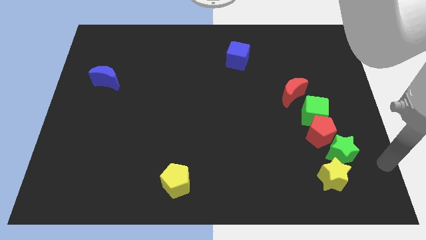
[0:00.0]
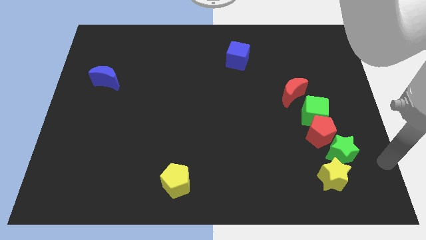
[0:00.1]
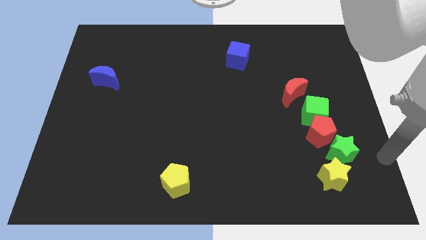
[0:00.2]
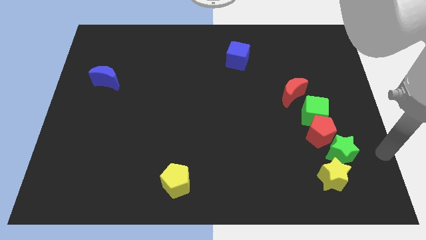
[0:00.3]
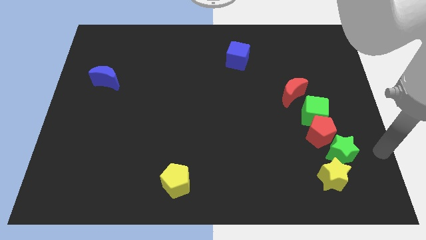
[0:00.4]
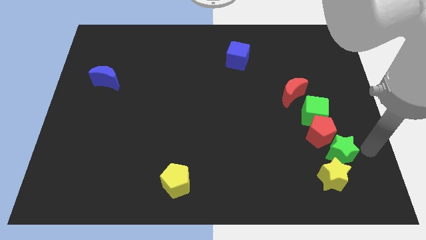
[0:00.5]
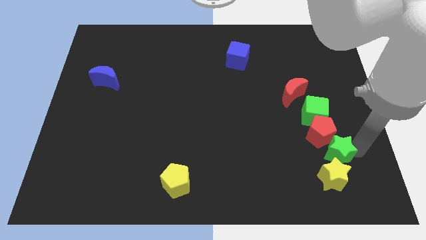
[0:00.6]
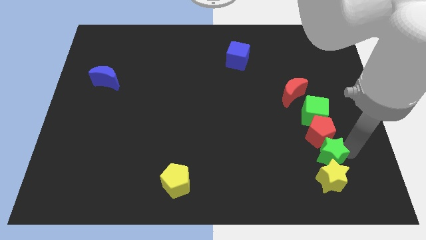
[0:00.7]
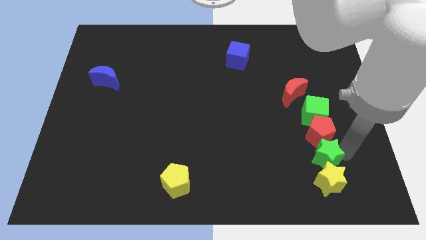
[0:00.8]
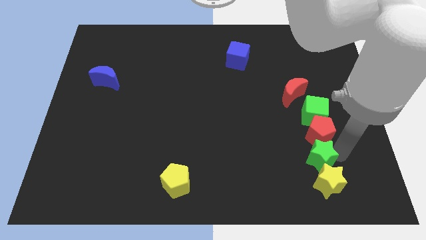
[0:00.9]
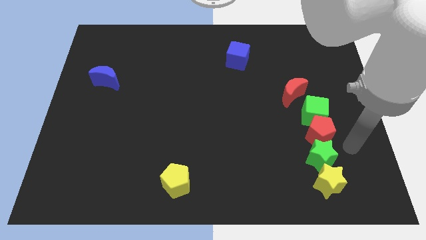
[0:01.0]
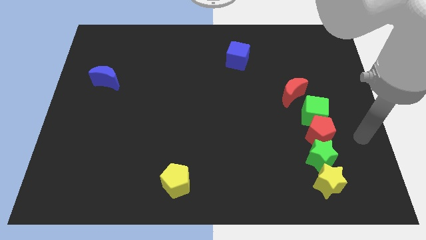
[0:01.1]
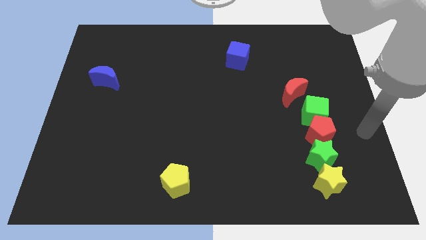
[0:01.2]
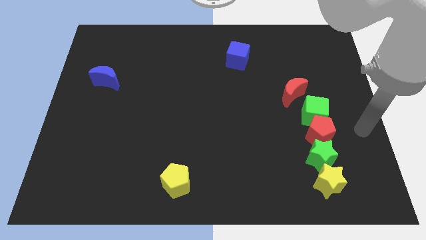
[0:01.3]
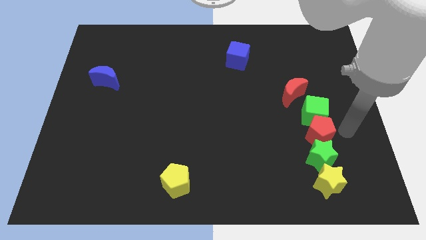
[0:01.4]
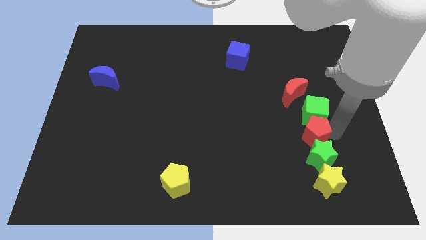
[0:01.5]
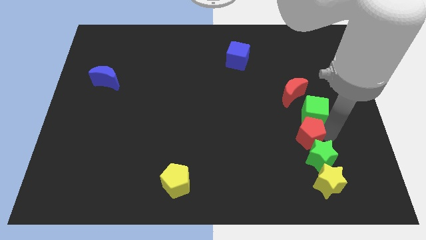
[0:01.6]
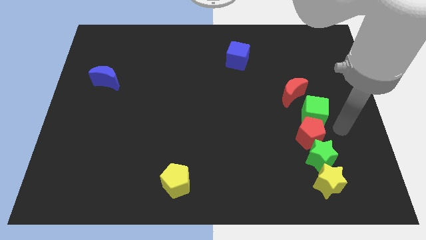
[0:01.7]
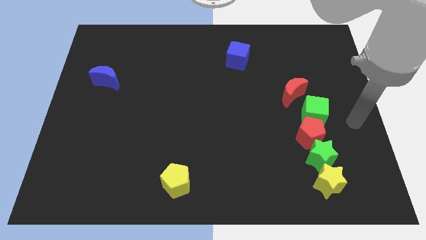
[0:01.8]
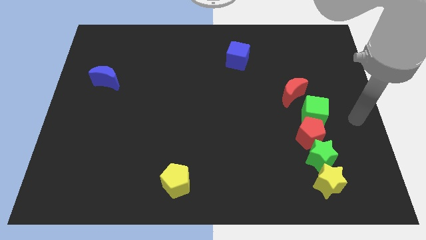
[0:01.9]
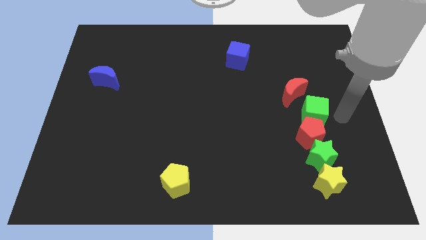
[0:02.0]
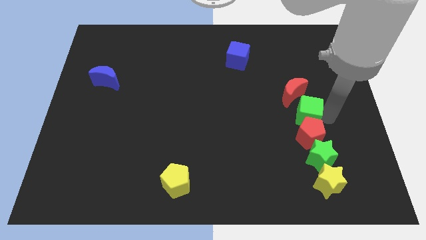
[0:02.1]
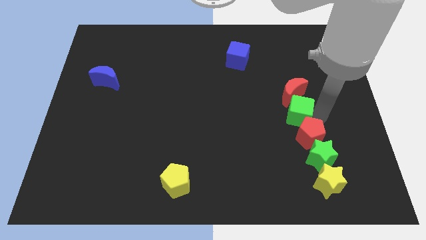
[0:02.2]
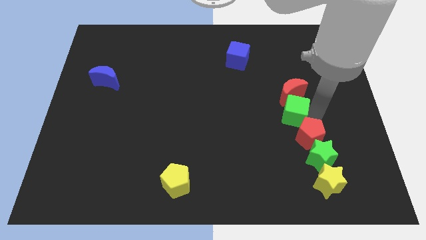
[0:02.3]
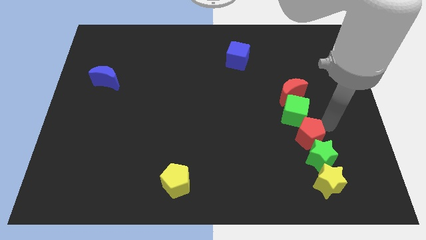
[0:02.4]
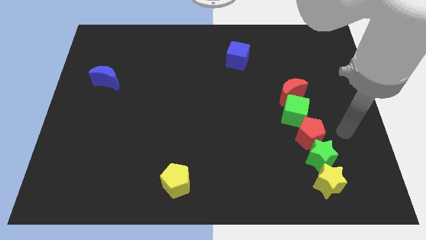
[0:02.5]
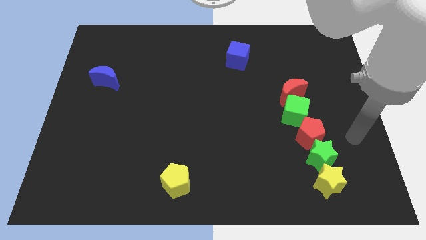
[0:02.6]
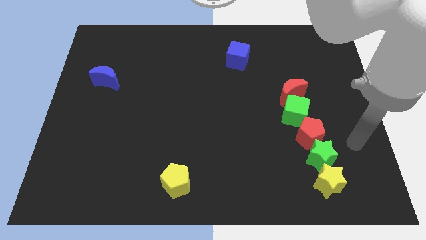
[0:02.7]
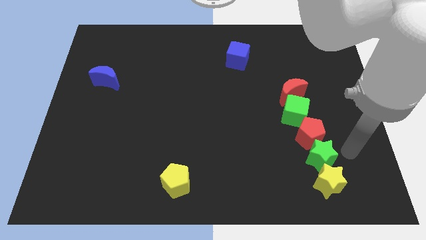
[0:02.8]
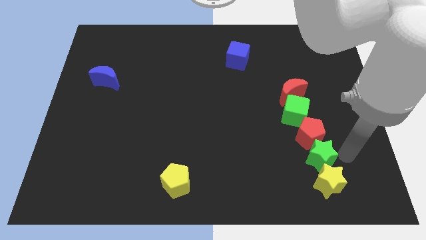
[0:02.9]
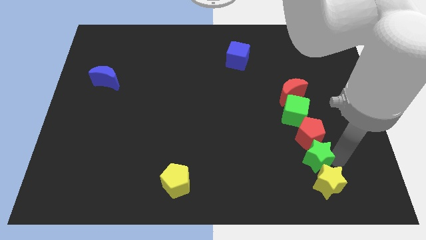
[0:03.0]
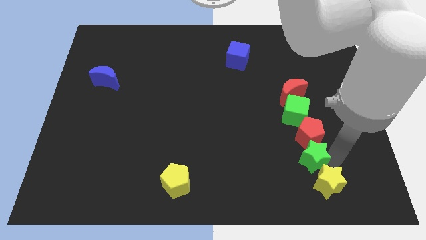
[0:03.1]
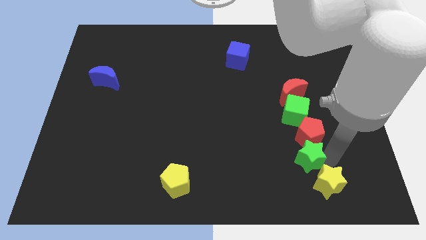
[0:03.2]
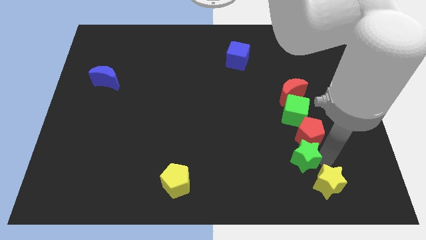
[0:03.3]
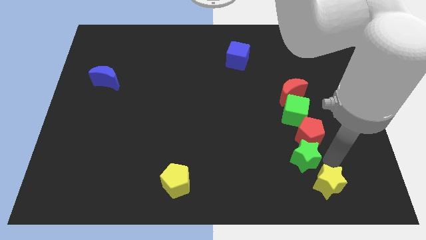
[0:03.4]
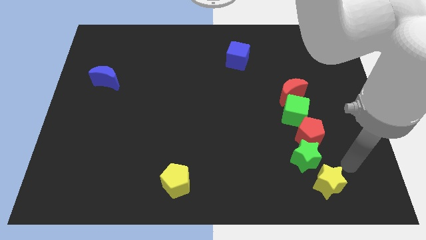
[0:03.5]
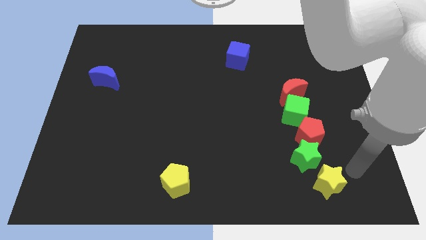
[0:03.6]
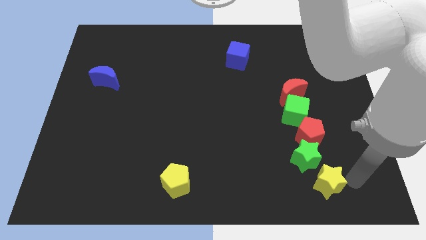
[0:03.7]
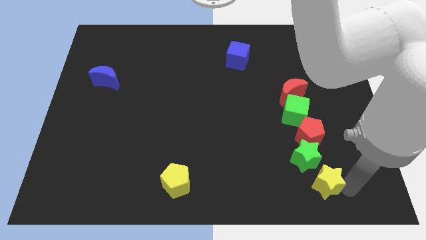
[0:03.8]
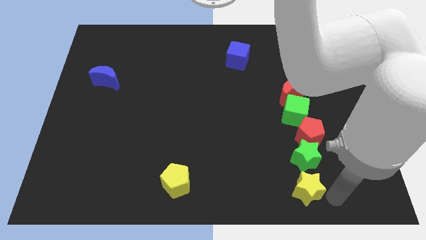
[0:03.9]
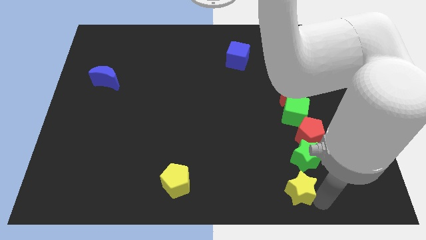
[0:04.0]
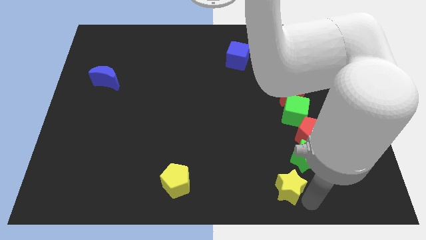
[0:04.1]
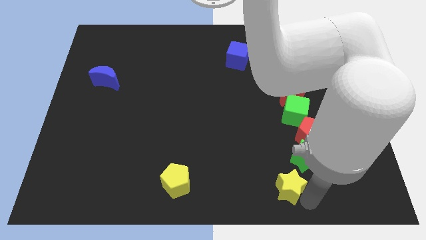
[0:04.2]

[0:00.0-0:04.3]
push blocks towards left

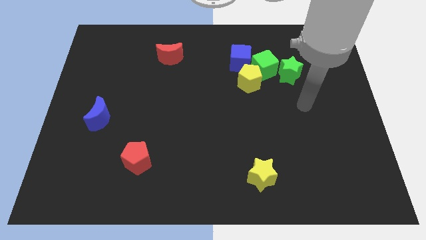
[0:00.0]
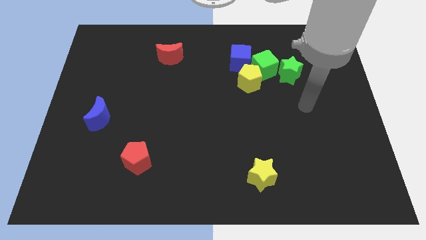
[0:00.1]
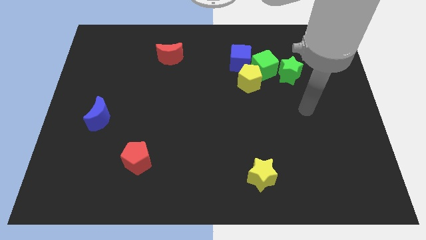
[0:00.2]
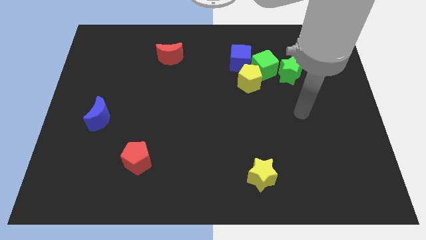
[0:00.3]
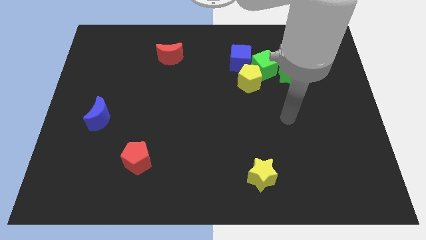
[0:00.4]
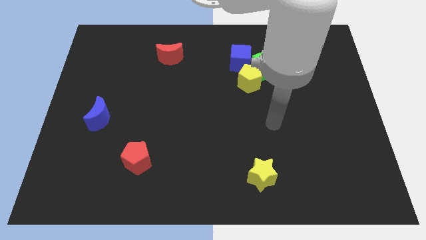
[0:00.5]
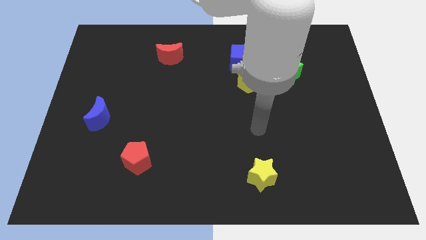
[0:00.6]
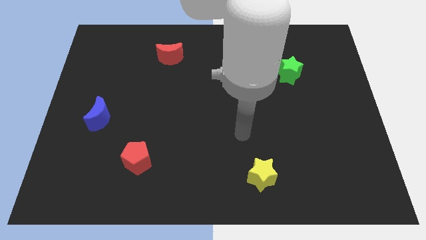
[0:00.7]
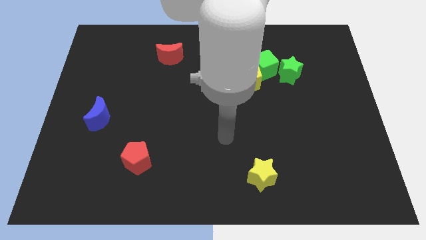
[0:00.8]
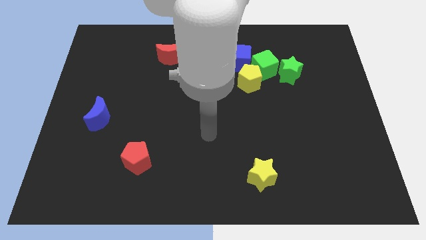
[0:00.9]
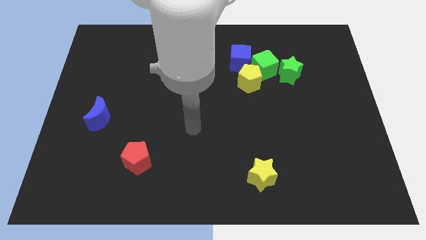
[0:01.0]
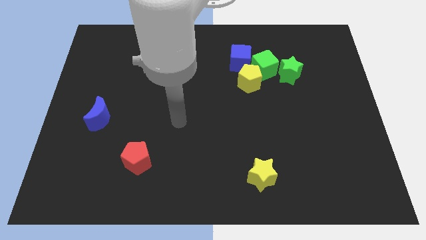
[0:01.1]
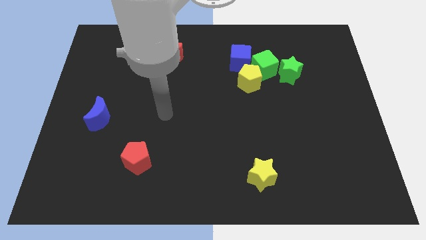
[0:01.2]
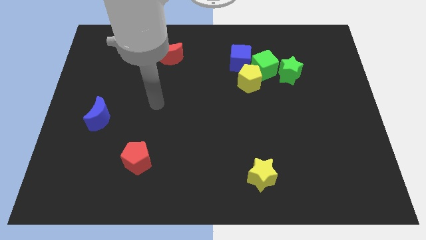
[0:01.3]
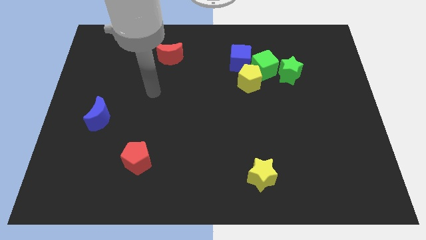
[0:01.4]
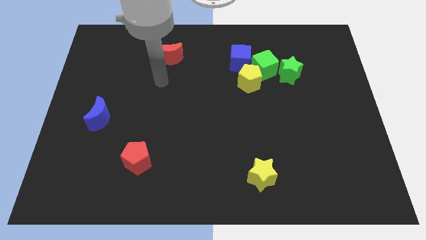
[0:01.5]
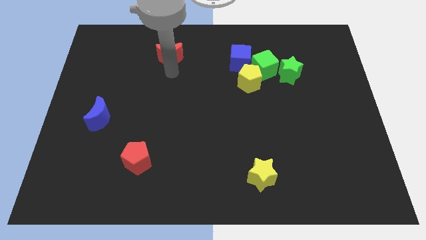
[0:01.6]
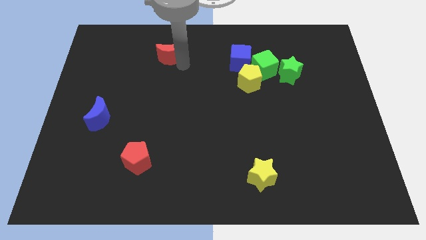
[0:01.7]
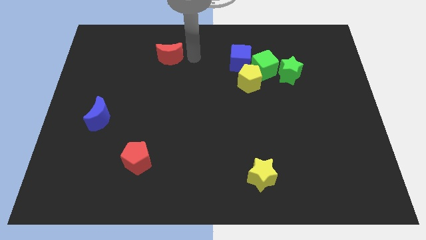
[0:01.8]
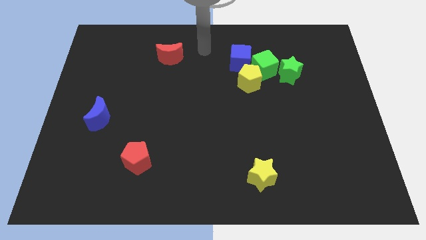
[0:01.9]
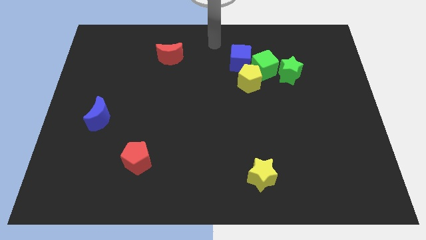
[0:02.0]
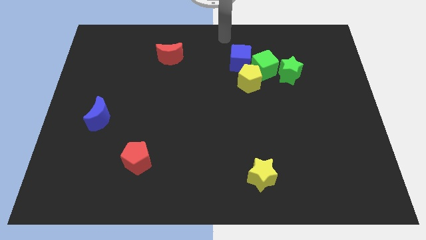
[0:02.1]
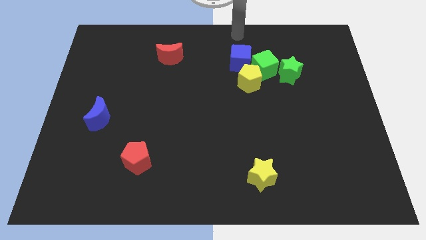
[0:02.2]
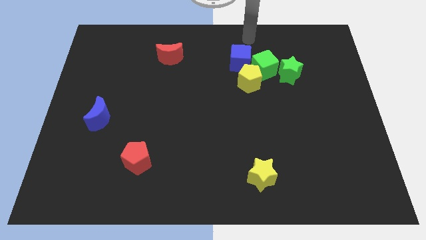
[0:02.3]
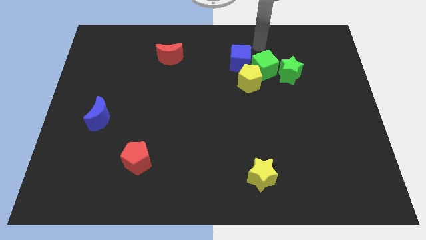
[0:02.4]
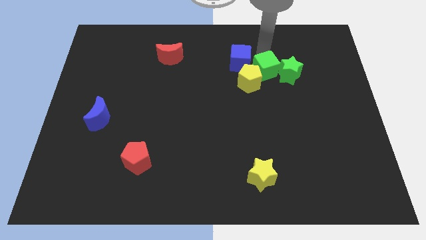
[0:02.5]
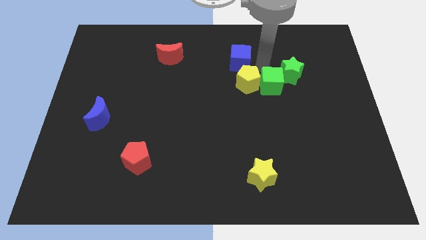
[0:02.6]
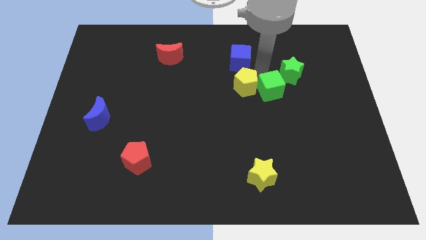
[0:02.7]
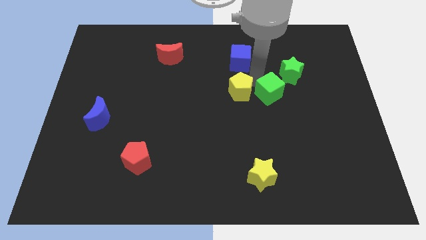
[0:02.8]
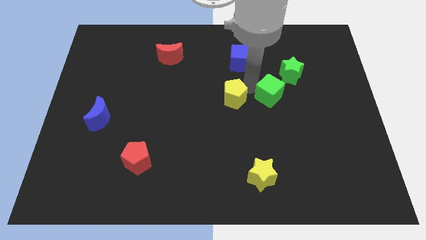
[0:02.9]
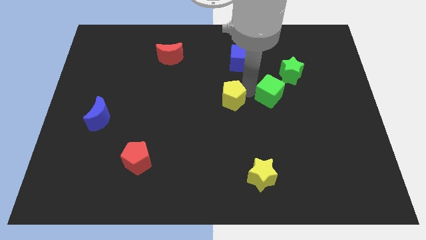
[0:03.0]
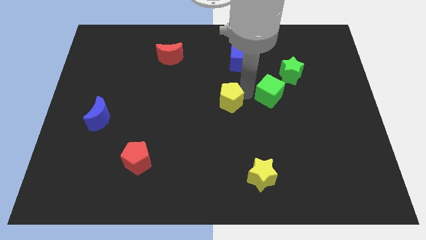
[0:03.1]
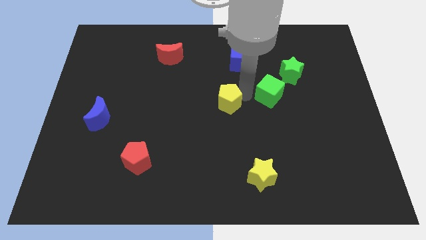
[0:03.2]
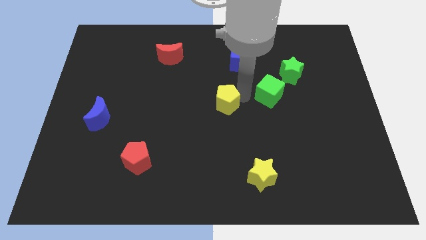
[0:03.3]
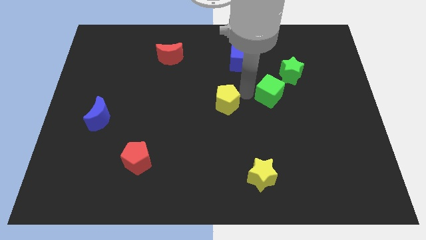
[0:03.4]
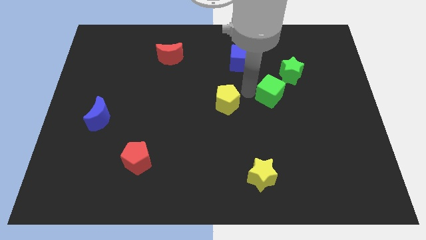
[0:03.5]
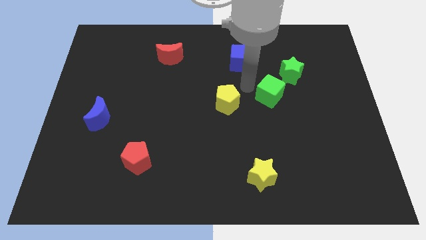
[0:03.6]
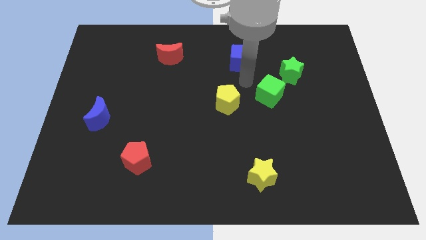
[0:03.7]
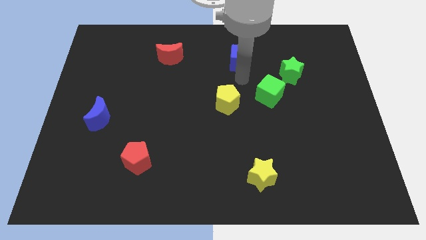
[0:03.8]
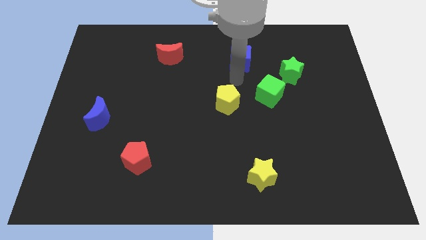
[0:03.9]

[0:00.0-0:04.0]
separate yellow pentagon and green cube

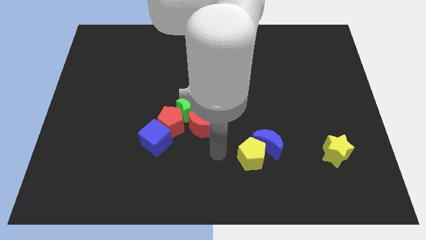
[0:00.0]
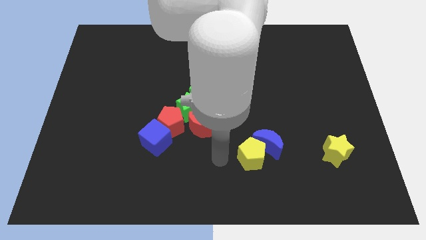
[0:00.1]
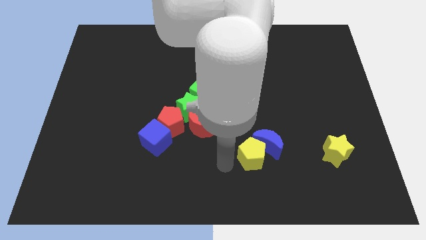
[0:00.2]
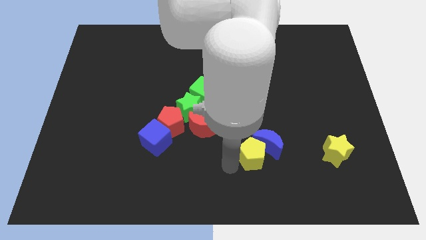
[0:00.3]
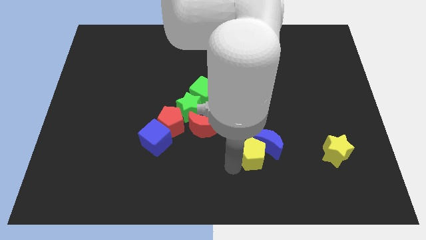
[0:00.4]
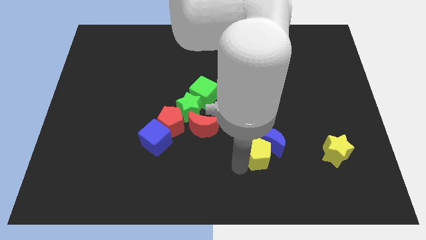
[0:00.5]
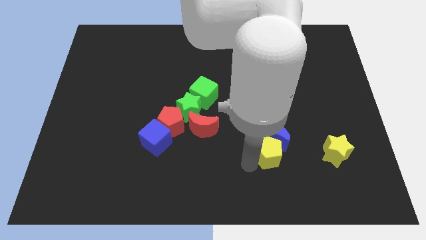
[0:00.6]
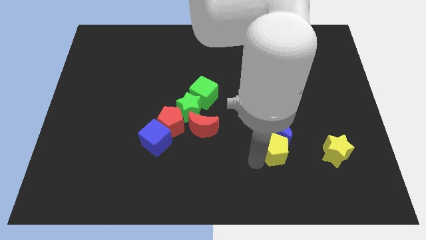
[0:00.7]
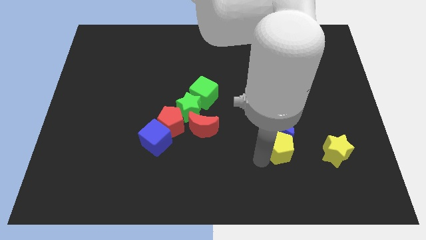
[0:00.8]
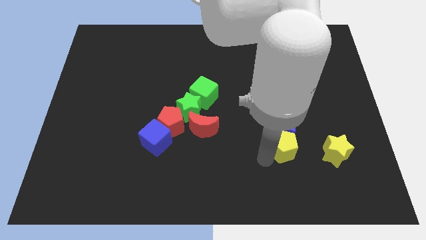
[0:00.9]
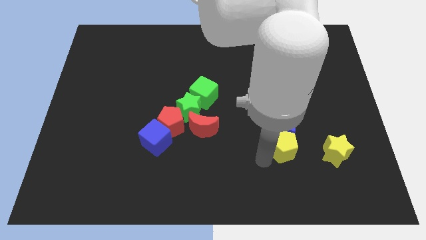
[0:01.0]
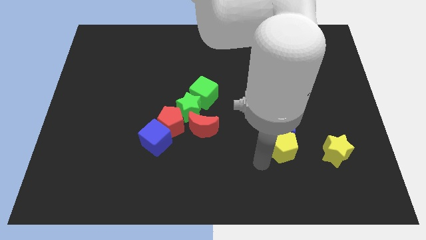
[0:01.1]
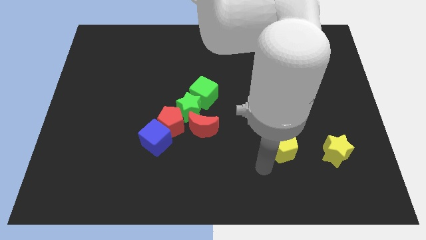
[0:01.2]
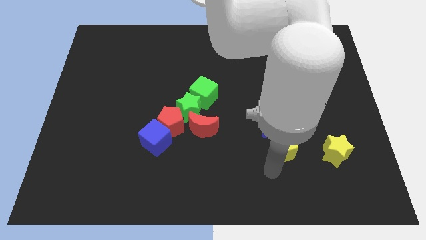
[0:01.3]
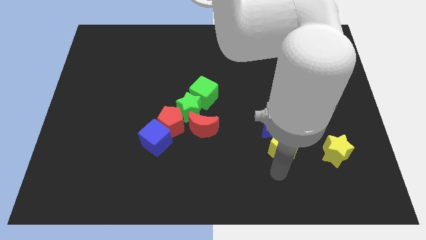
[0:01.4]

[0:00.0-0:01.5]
move the yellow pentagon to the left of yellow star
